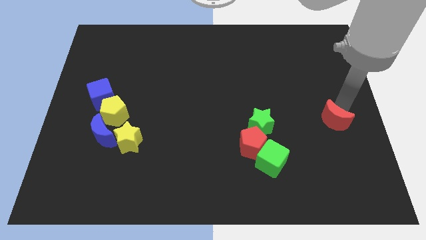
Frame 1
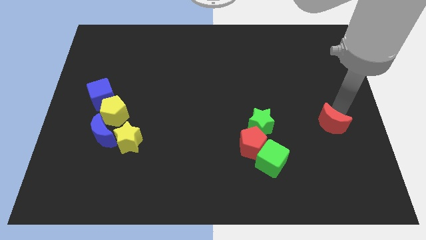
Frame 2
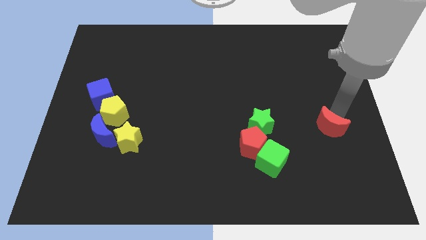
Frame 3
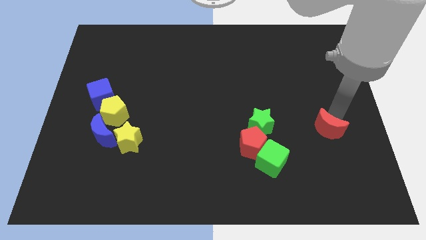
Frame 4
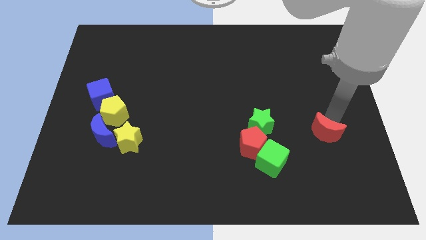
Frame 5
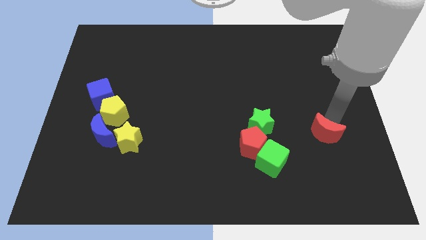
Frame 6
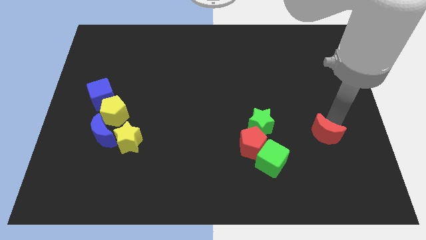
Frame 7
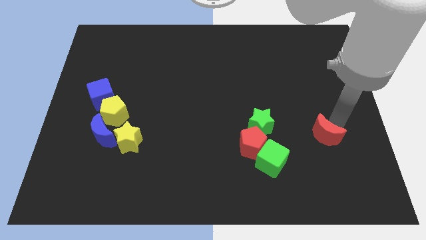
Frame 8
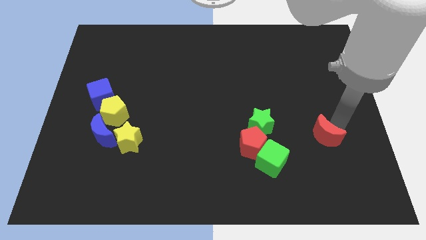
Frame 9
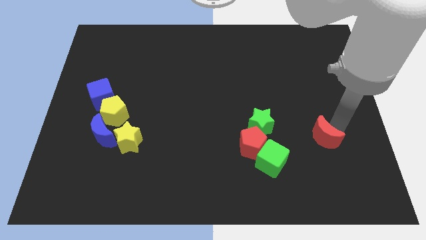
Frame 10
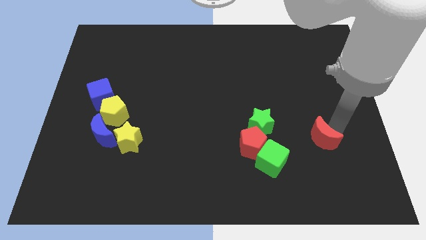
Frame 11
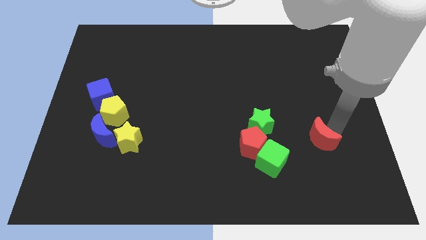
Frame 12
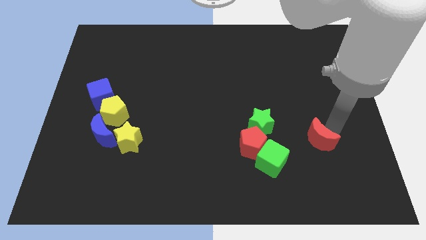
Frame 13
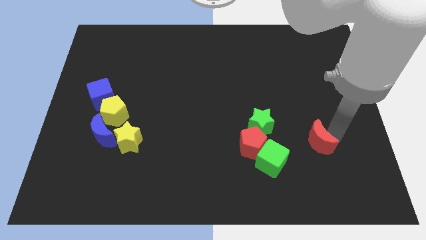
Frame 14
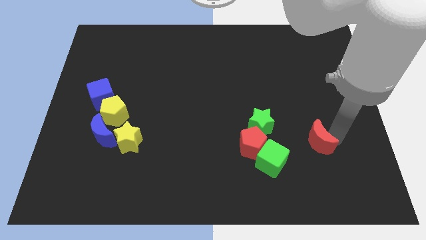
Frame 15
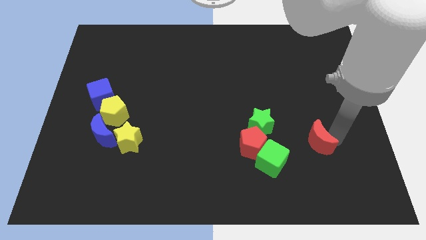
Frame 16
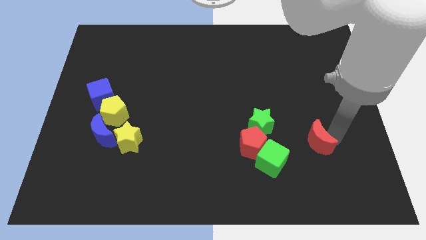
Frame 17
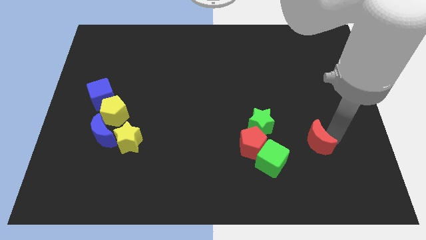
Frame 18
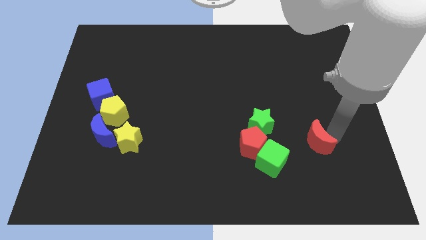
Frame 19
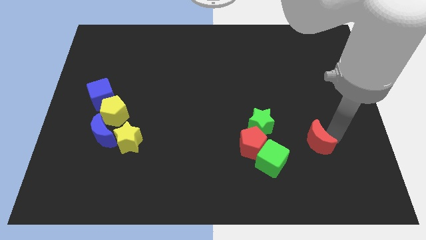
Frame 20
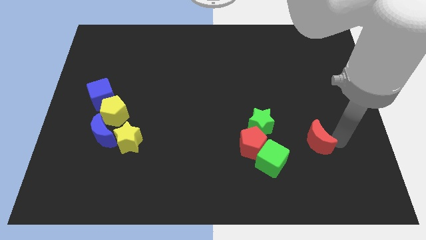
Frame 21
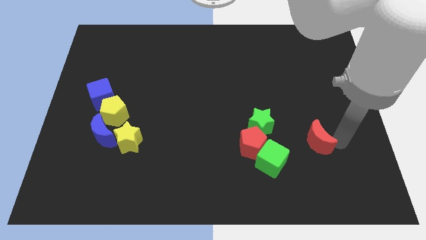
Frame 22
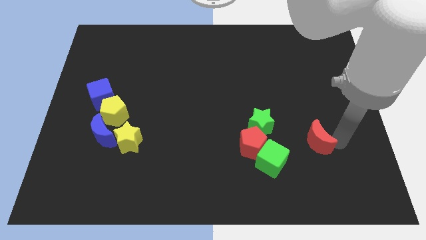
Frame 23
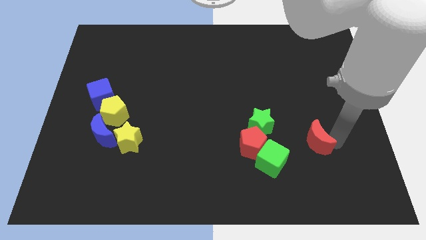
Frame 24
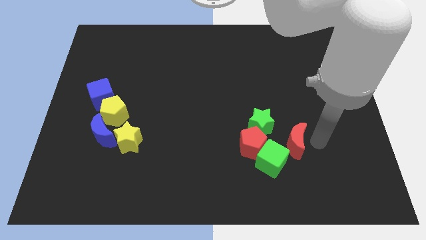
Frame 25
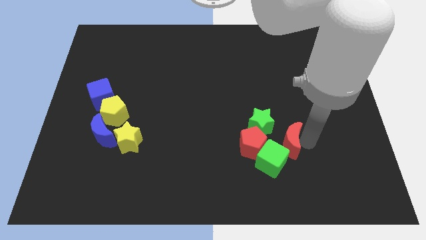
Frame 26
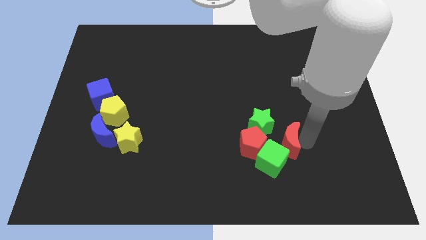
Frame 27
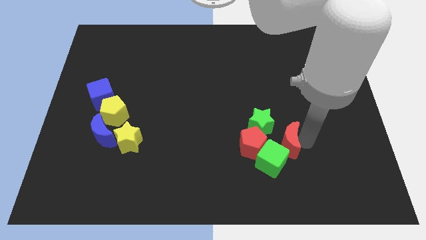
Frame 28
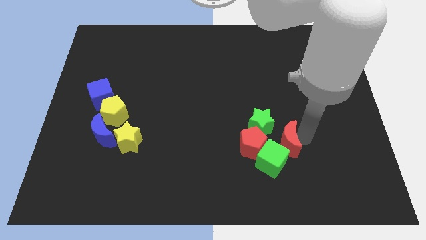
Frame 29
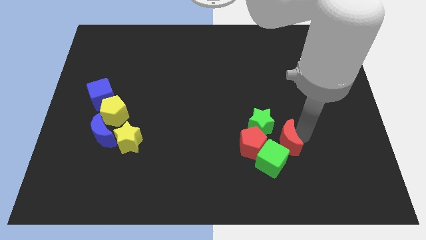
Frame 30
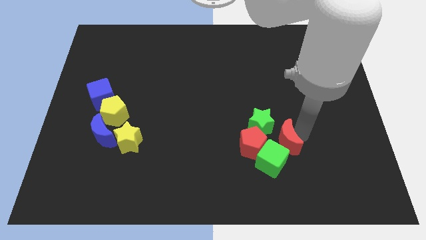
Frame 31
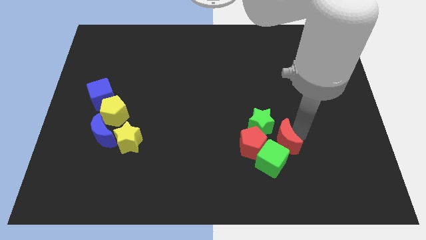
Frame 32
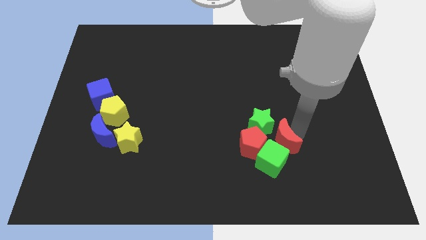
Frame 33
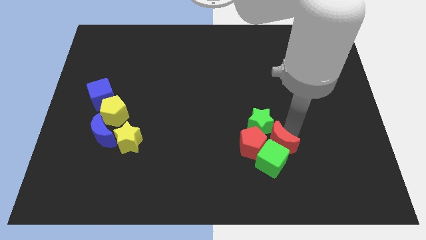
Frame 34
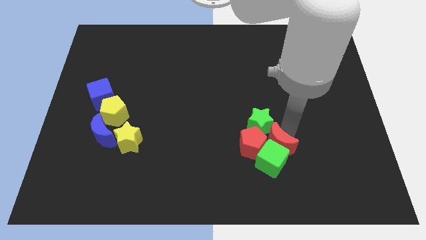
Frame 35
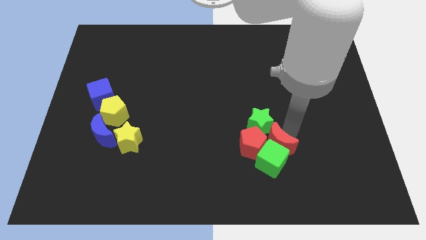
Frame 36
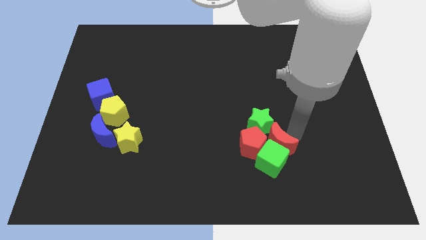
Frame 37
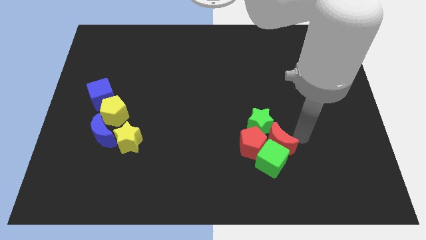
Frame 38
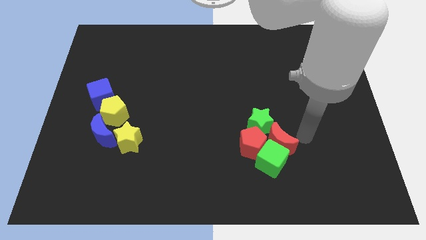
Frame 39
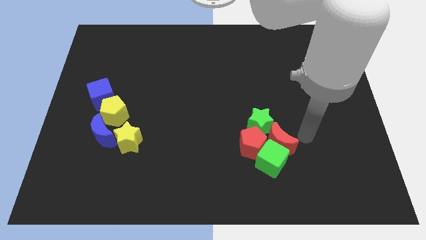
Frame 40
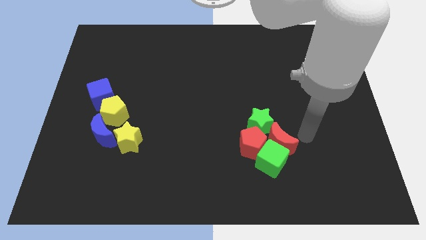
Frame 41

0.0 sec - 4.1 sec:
push the red moon between green star and green cube

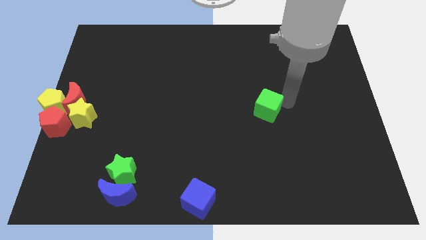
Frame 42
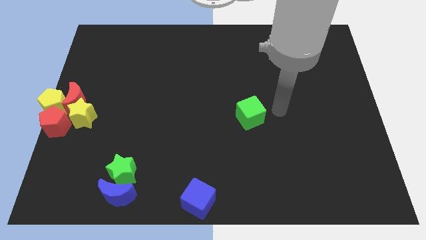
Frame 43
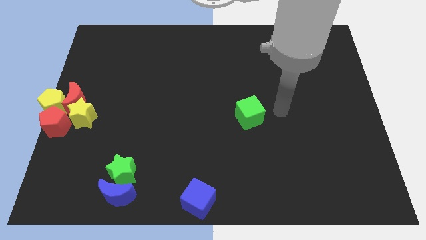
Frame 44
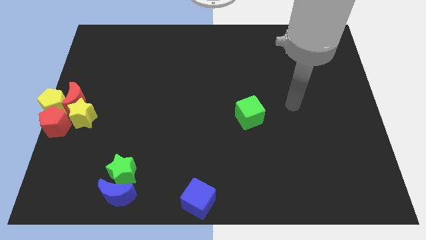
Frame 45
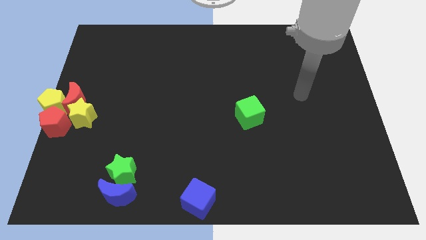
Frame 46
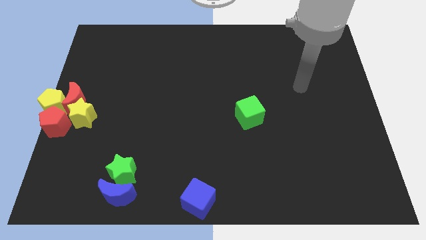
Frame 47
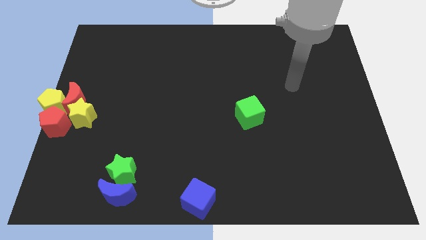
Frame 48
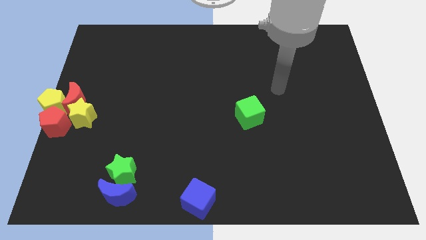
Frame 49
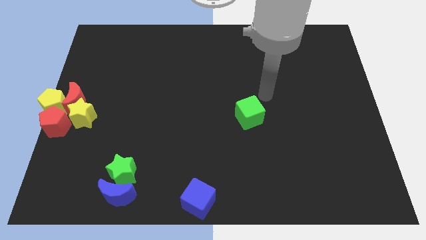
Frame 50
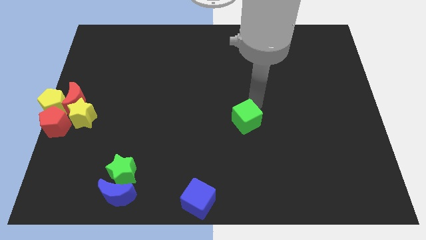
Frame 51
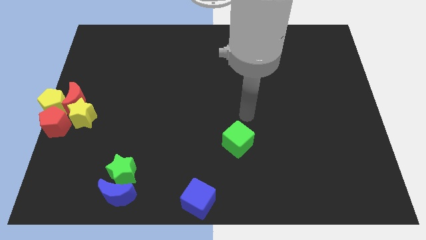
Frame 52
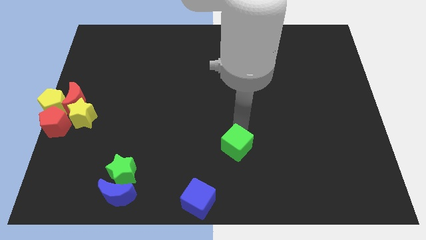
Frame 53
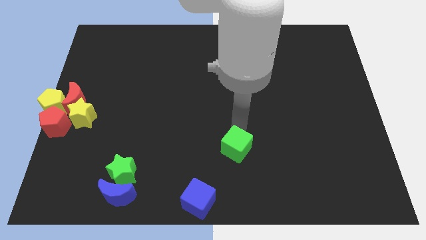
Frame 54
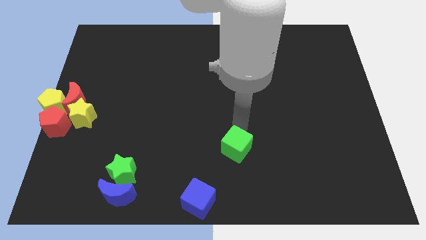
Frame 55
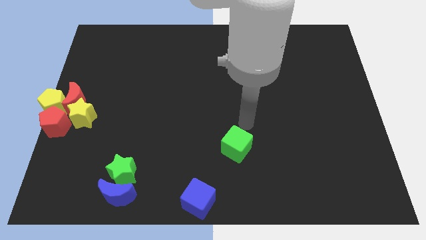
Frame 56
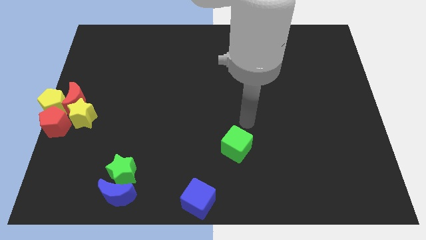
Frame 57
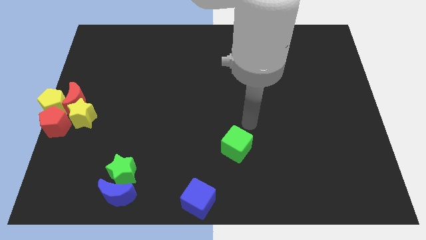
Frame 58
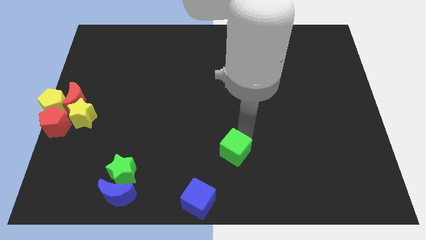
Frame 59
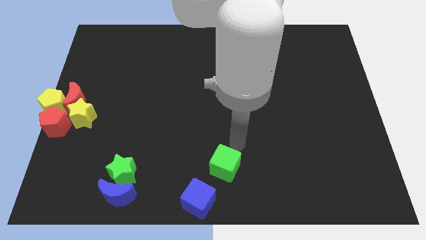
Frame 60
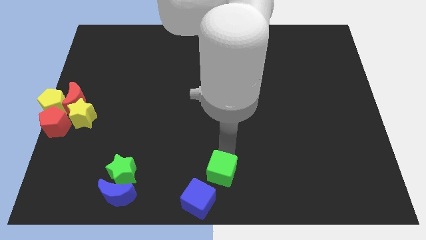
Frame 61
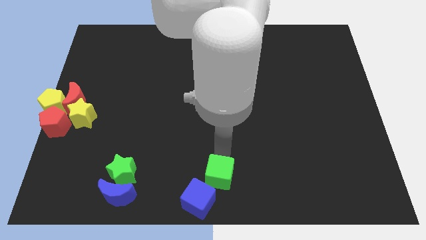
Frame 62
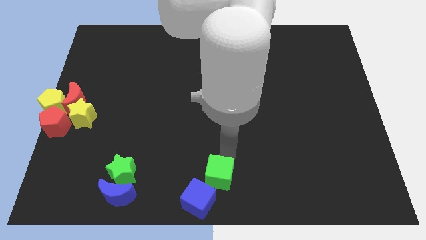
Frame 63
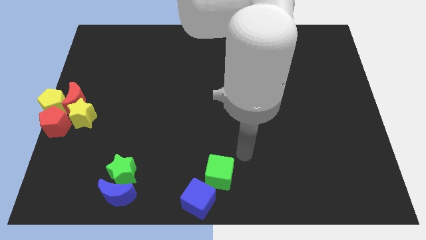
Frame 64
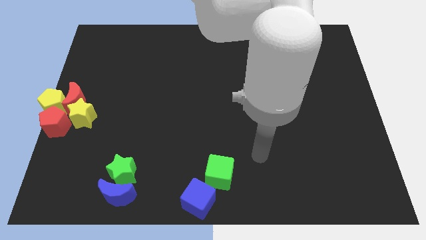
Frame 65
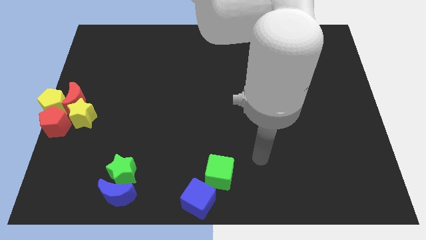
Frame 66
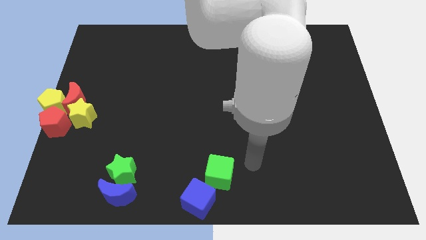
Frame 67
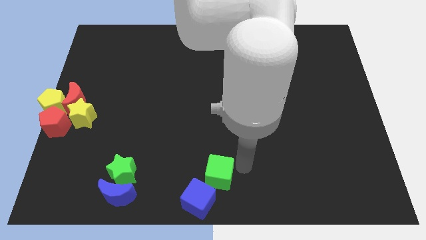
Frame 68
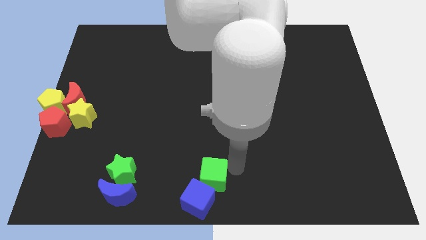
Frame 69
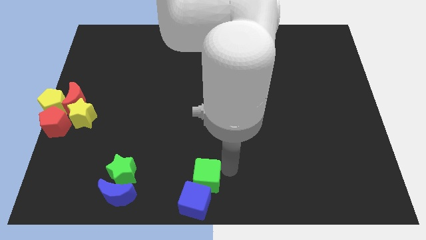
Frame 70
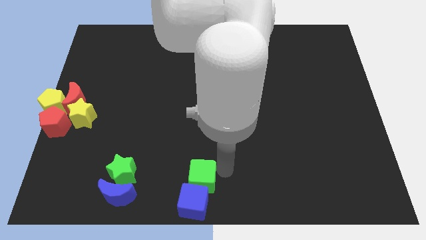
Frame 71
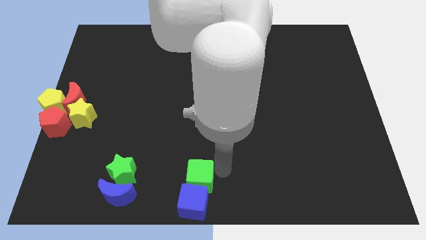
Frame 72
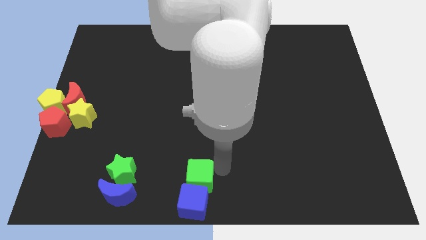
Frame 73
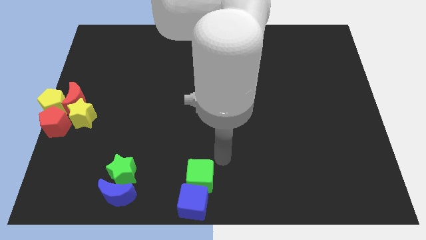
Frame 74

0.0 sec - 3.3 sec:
slide the green cube into the top side of the blue cube

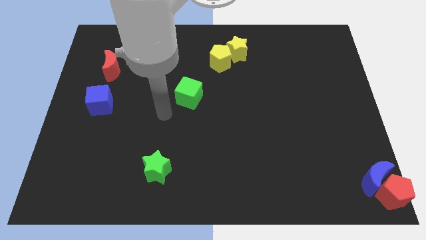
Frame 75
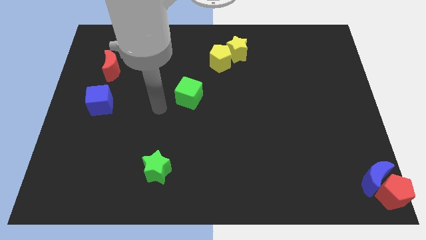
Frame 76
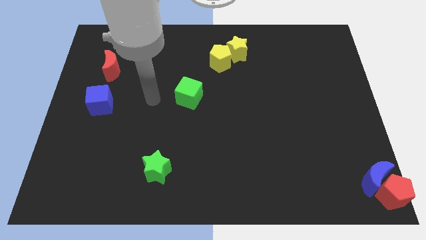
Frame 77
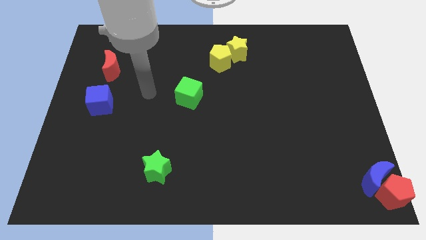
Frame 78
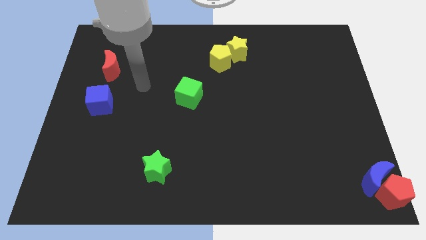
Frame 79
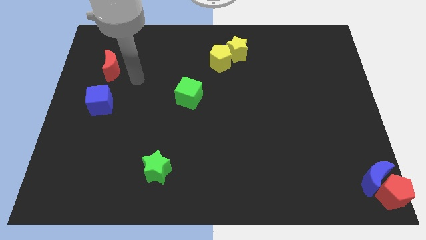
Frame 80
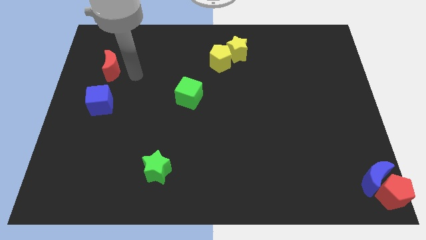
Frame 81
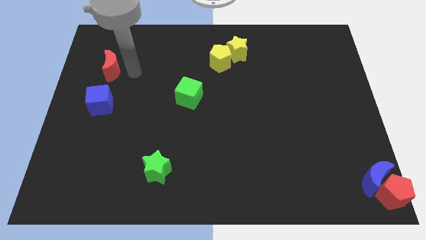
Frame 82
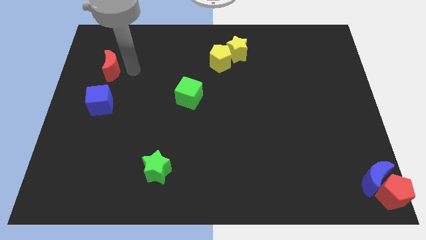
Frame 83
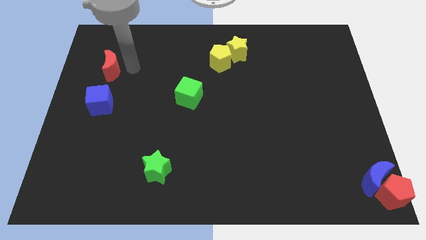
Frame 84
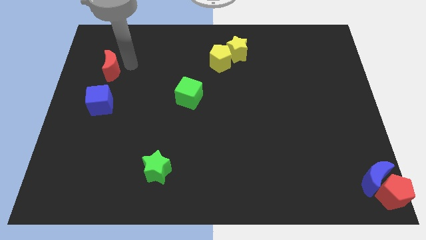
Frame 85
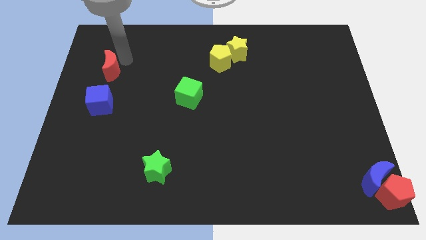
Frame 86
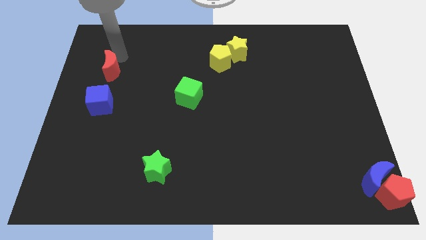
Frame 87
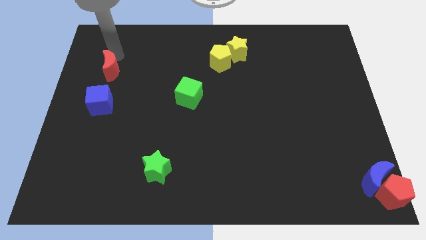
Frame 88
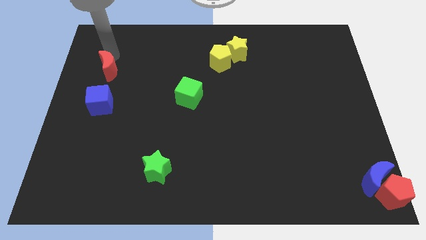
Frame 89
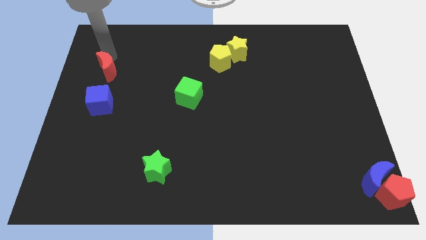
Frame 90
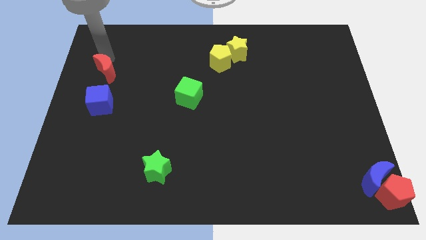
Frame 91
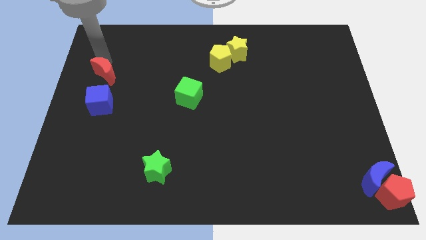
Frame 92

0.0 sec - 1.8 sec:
push the red crescent slightly down
